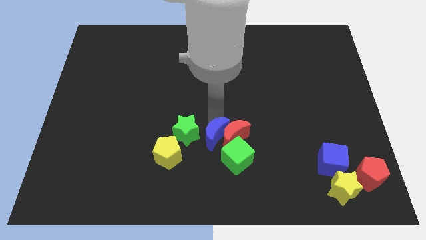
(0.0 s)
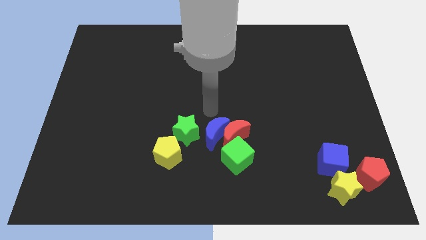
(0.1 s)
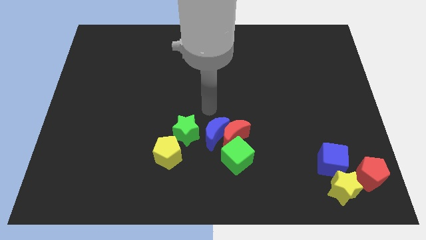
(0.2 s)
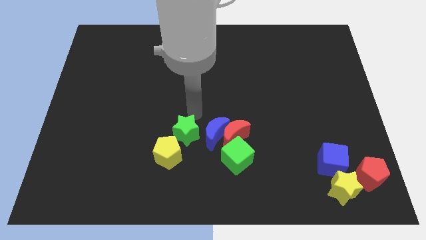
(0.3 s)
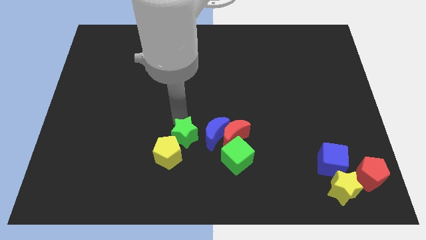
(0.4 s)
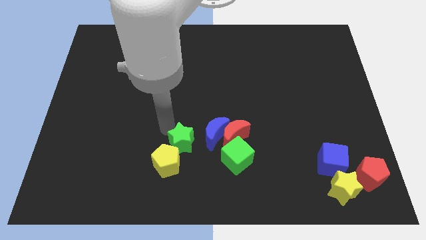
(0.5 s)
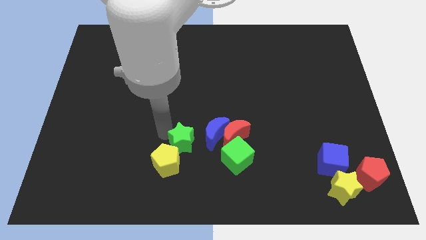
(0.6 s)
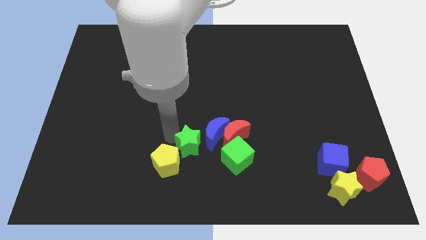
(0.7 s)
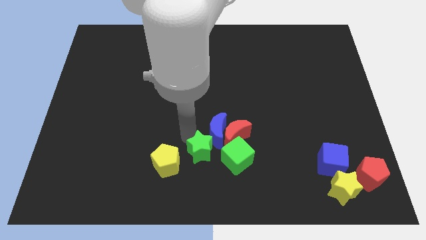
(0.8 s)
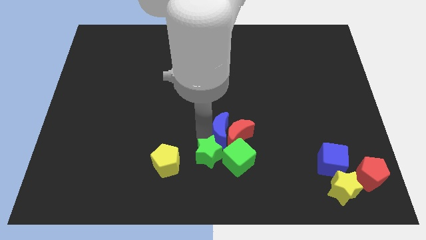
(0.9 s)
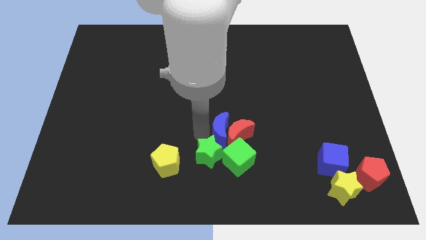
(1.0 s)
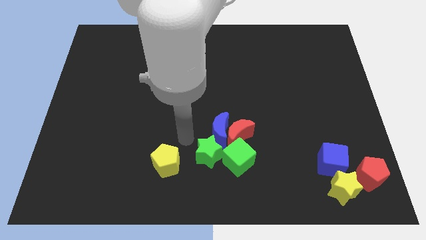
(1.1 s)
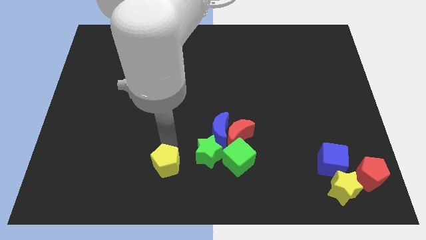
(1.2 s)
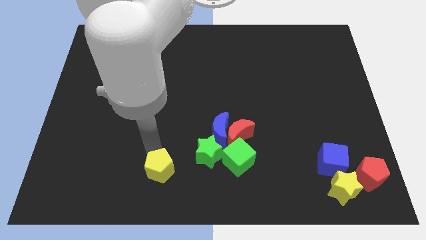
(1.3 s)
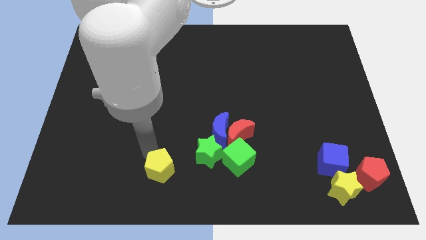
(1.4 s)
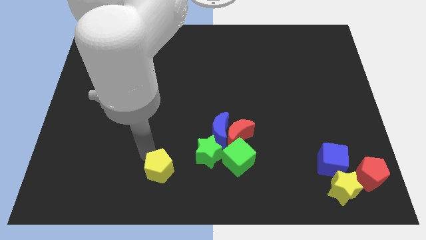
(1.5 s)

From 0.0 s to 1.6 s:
put the green star into the green cube

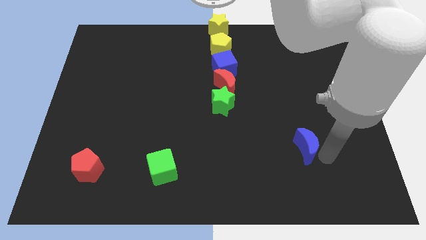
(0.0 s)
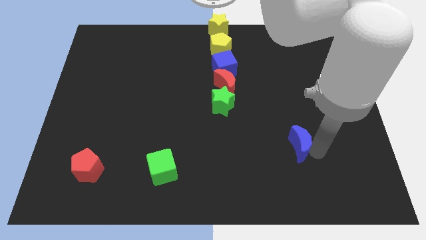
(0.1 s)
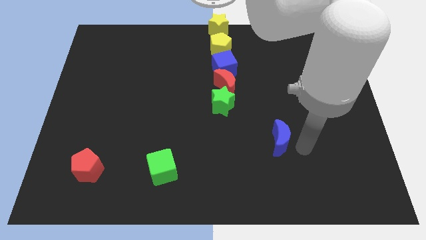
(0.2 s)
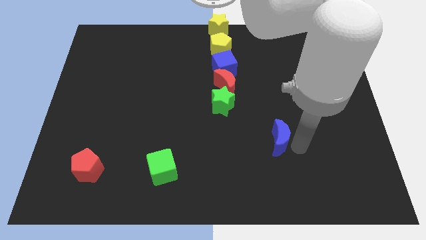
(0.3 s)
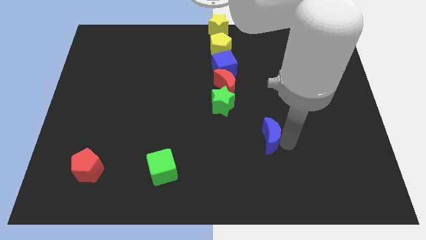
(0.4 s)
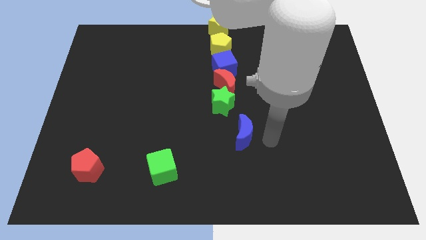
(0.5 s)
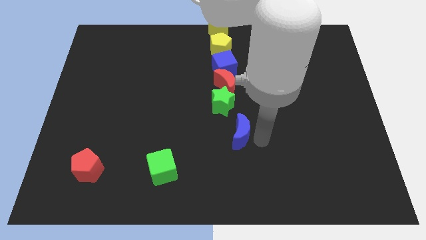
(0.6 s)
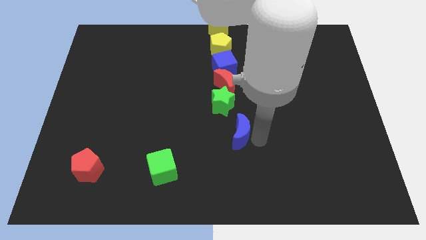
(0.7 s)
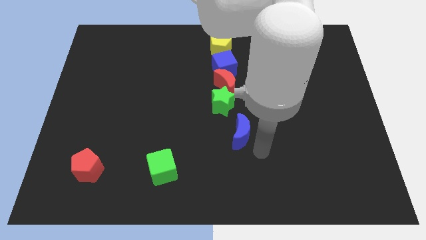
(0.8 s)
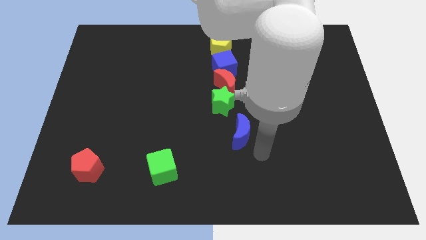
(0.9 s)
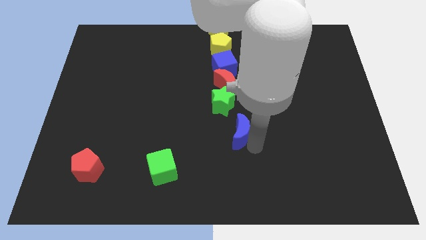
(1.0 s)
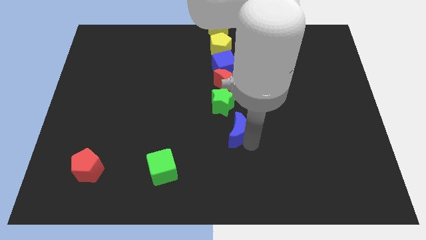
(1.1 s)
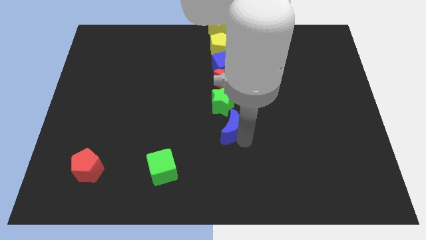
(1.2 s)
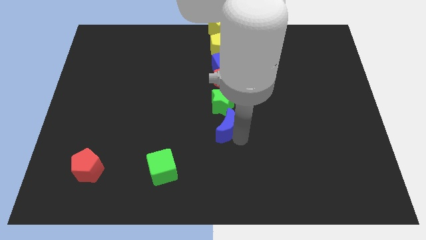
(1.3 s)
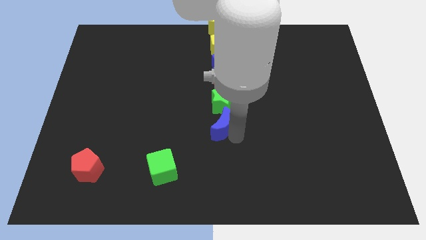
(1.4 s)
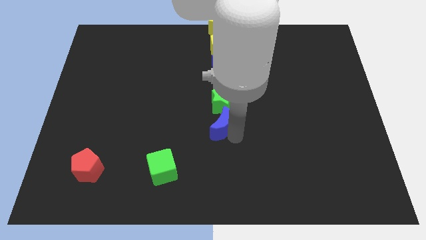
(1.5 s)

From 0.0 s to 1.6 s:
put the blue moon vertically below the green star

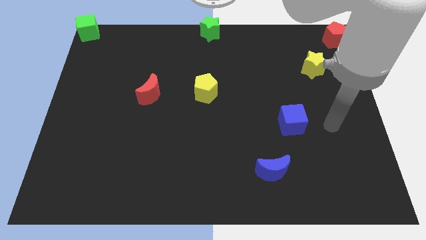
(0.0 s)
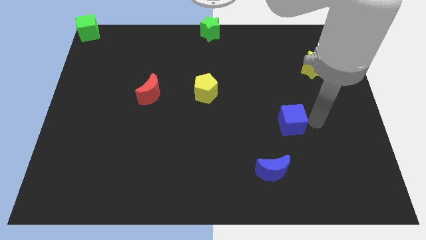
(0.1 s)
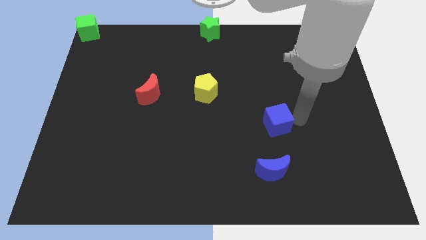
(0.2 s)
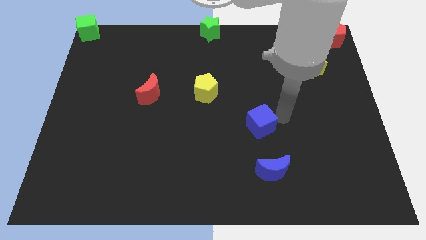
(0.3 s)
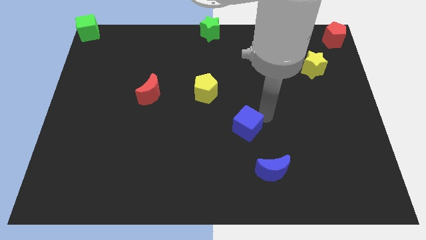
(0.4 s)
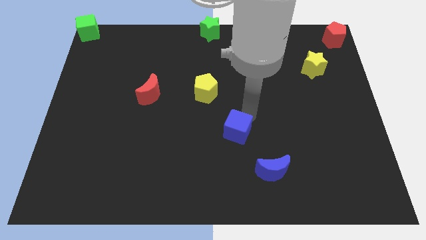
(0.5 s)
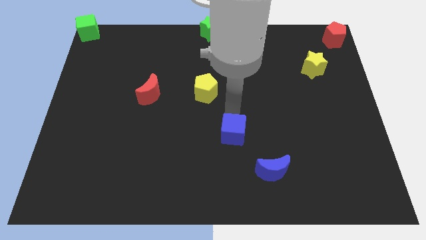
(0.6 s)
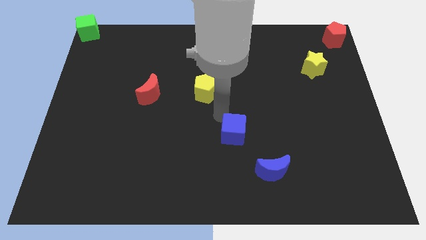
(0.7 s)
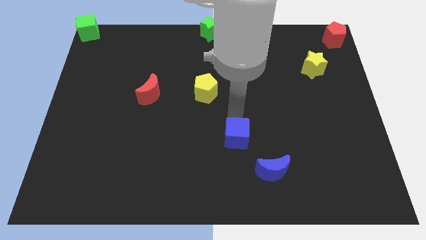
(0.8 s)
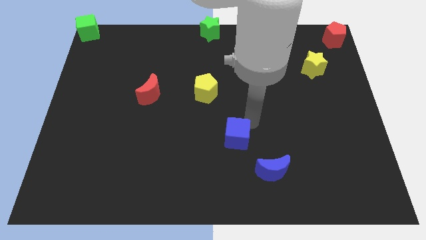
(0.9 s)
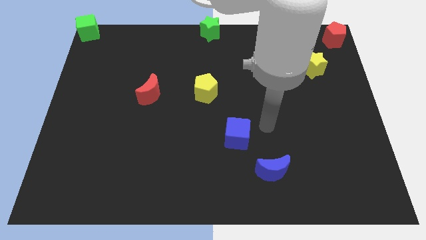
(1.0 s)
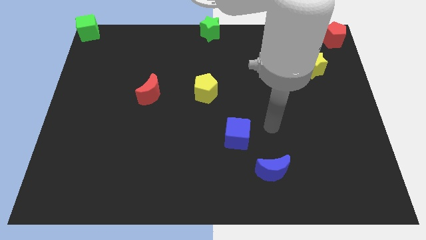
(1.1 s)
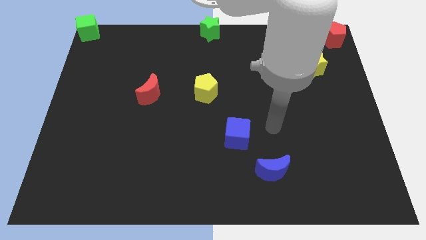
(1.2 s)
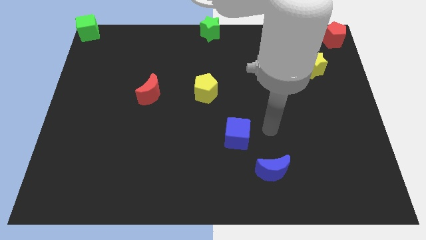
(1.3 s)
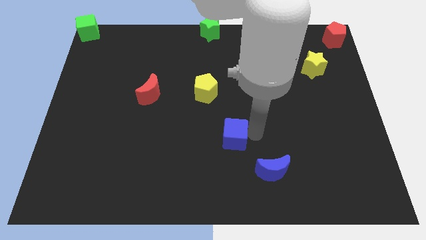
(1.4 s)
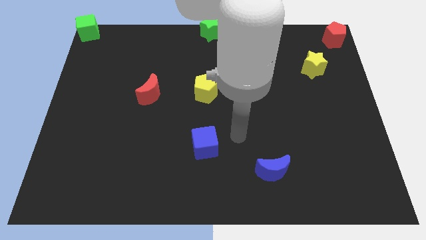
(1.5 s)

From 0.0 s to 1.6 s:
push blue cube below yellow pentagon

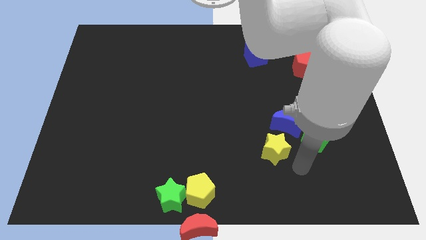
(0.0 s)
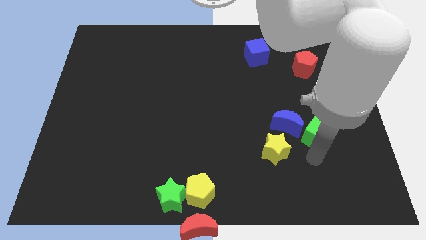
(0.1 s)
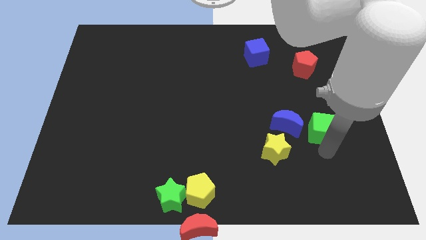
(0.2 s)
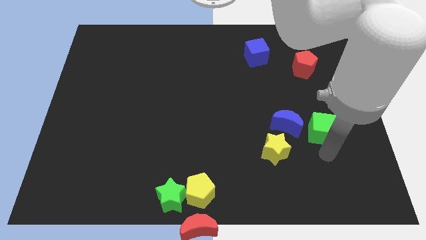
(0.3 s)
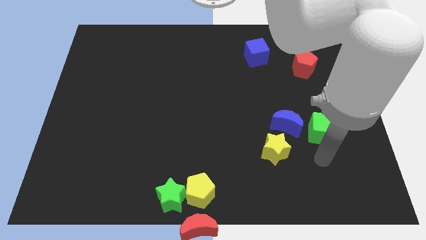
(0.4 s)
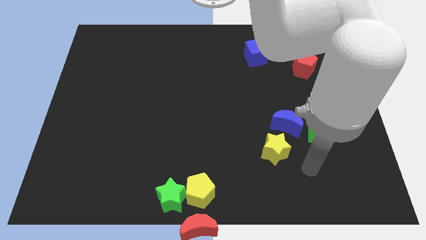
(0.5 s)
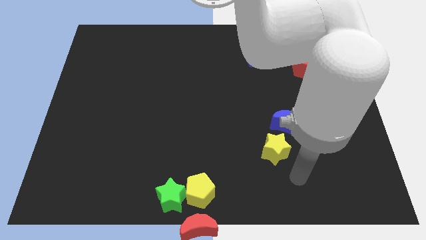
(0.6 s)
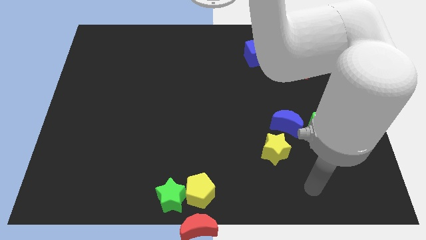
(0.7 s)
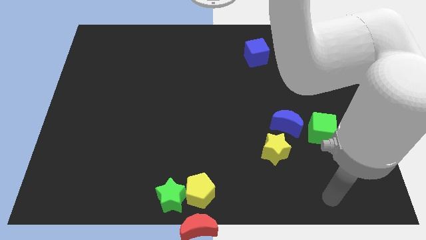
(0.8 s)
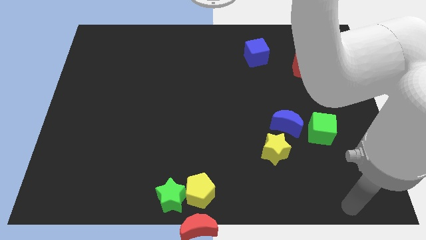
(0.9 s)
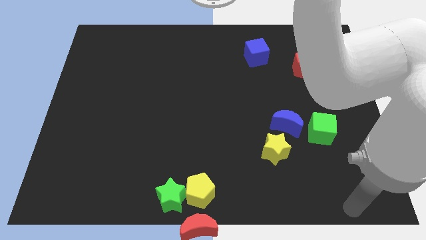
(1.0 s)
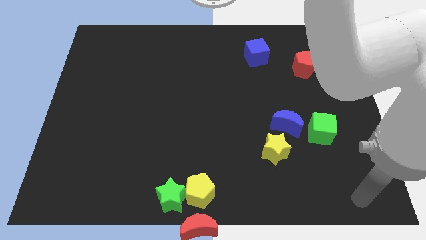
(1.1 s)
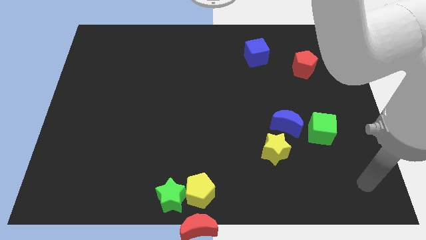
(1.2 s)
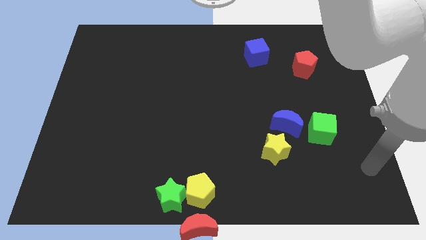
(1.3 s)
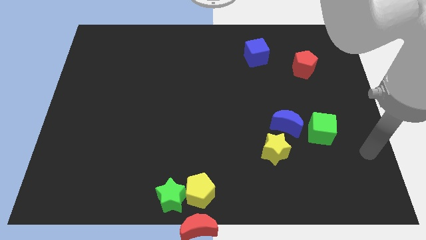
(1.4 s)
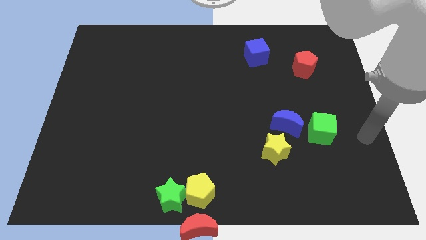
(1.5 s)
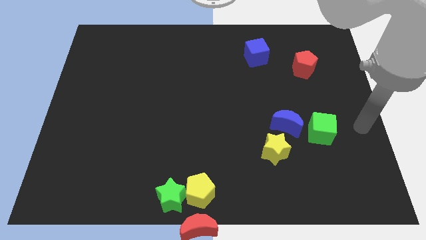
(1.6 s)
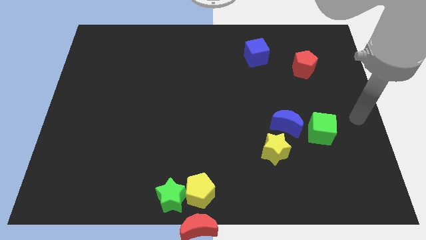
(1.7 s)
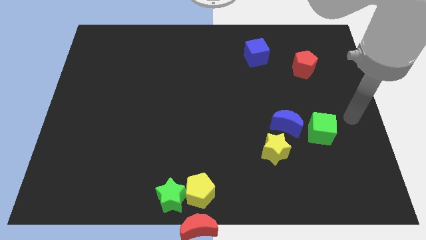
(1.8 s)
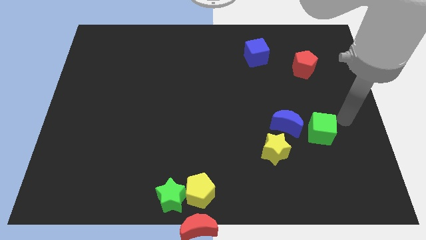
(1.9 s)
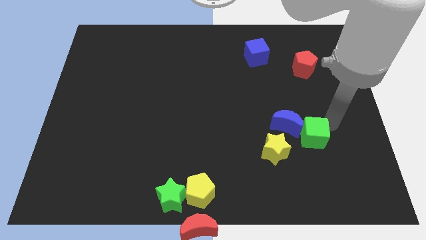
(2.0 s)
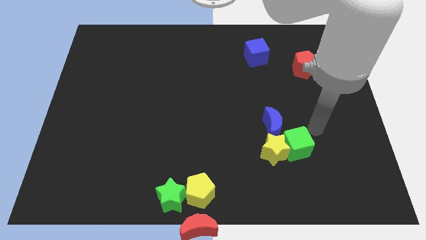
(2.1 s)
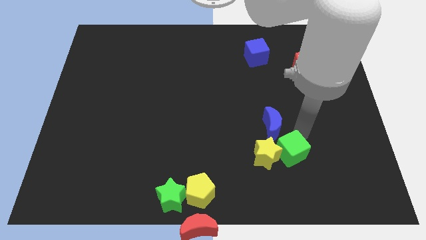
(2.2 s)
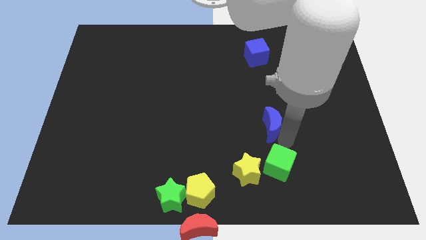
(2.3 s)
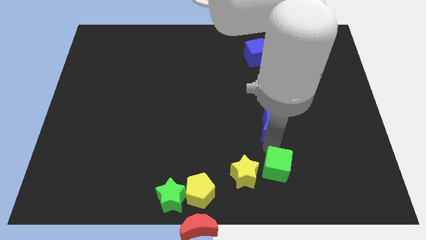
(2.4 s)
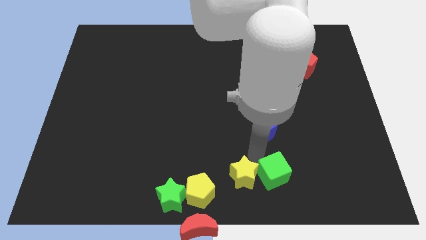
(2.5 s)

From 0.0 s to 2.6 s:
push the green cube into the yellow star

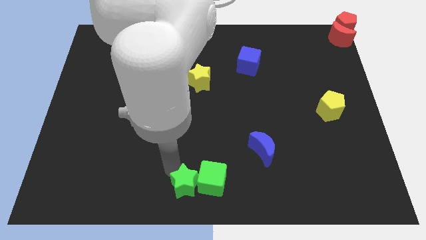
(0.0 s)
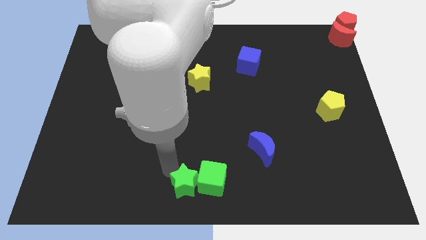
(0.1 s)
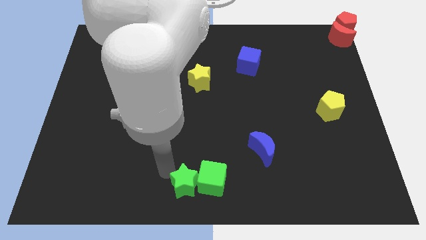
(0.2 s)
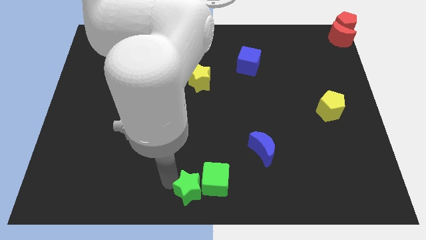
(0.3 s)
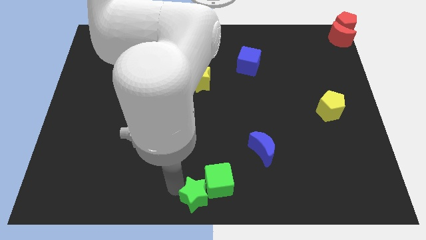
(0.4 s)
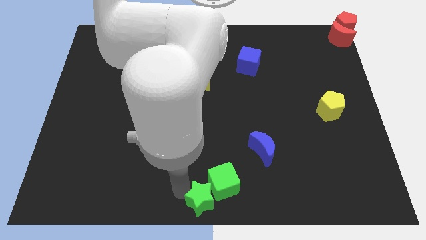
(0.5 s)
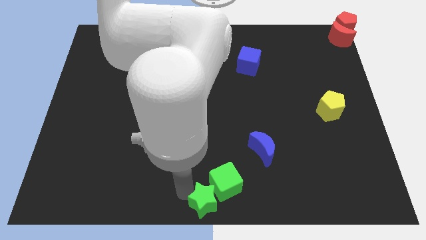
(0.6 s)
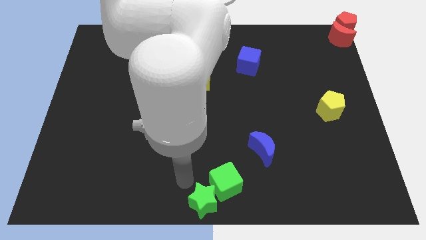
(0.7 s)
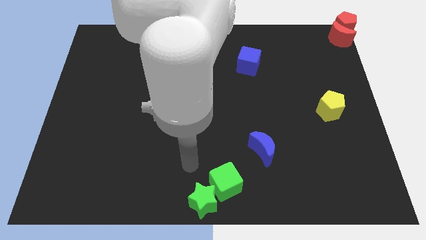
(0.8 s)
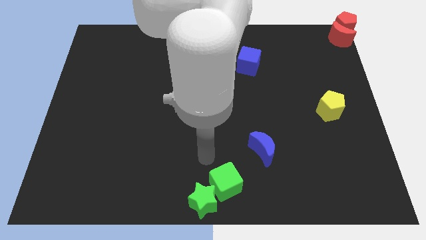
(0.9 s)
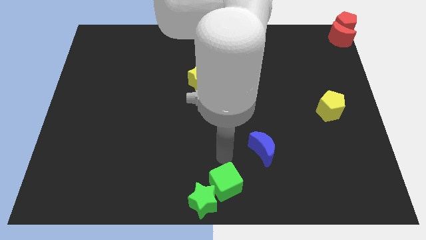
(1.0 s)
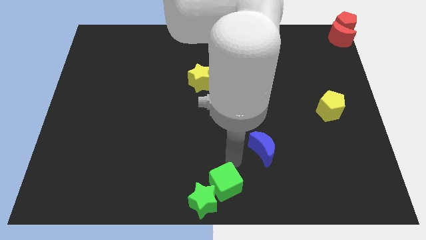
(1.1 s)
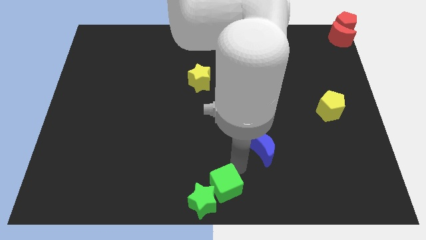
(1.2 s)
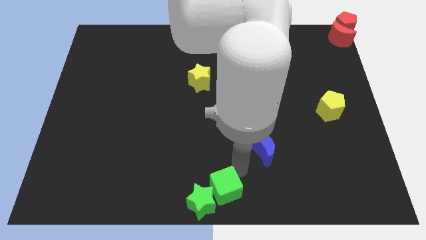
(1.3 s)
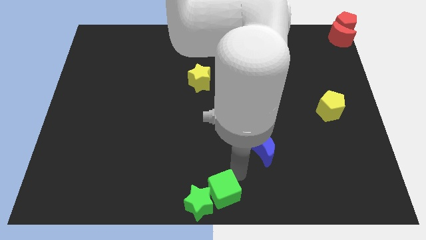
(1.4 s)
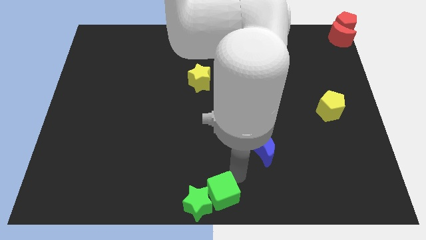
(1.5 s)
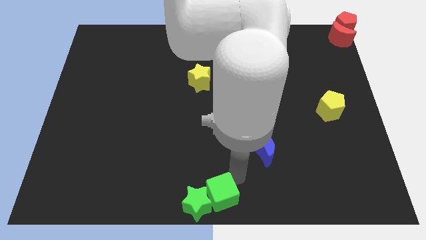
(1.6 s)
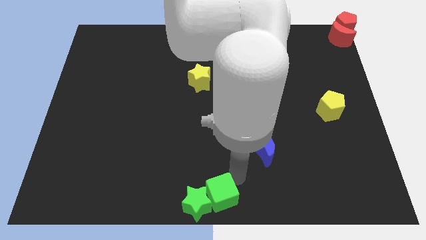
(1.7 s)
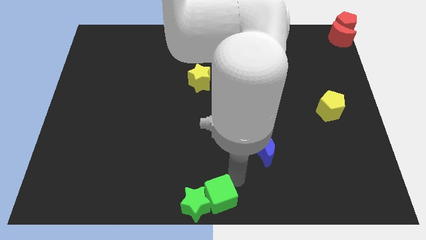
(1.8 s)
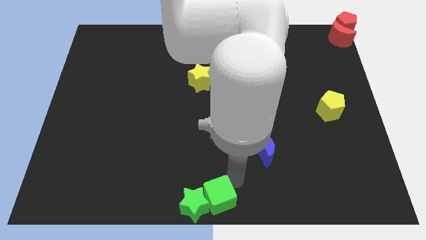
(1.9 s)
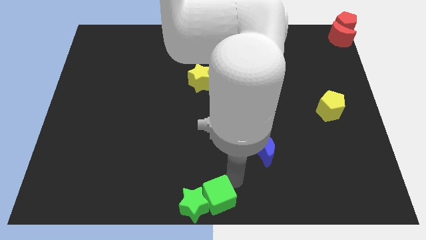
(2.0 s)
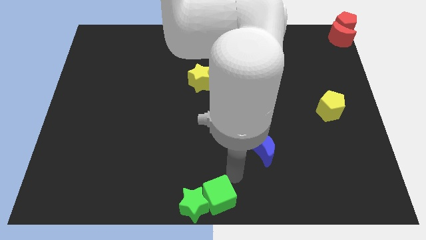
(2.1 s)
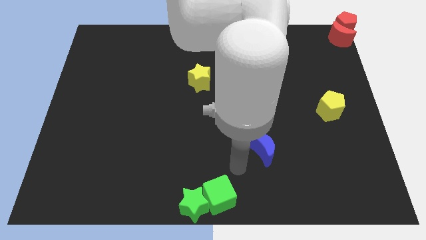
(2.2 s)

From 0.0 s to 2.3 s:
push the green cube into the green star
